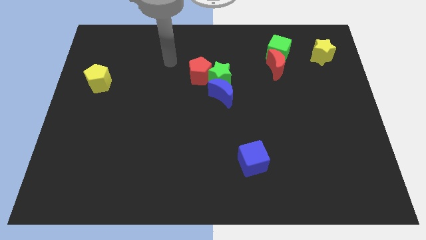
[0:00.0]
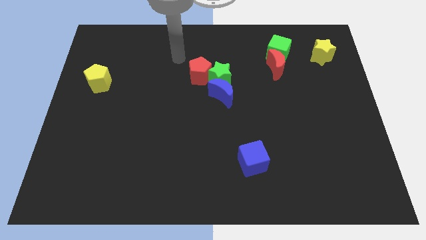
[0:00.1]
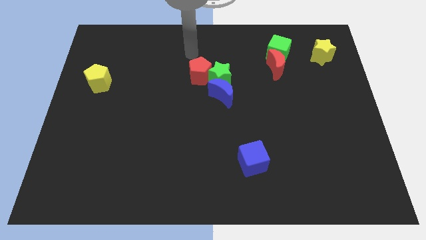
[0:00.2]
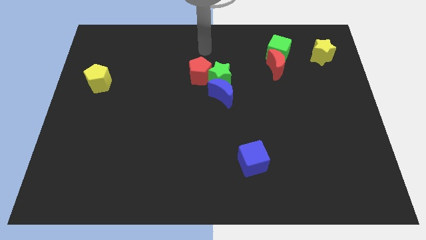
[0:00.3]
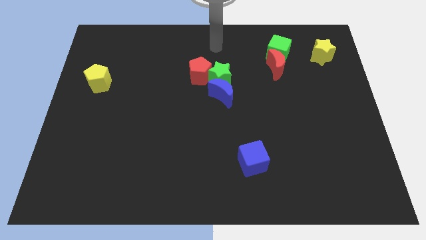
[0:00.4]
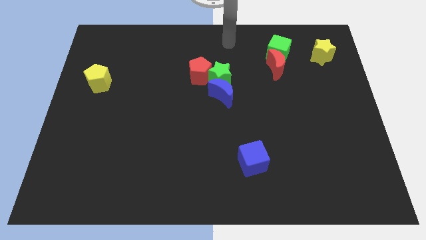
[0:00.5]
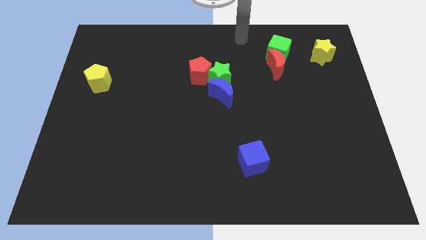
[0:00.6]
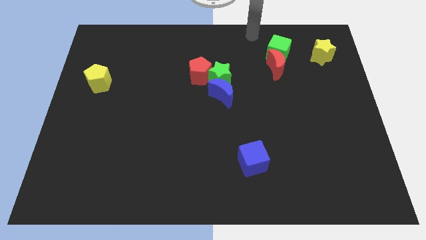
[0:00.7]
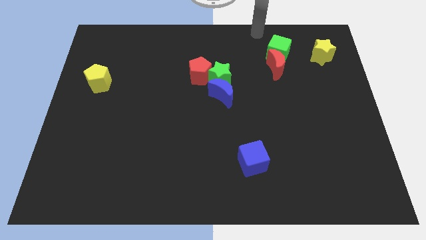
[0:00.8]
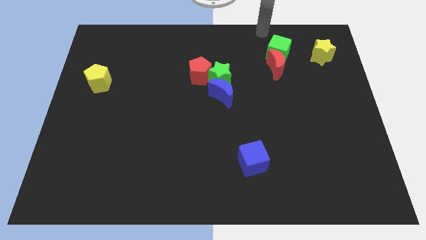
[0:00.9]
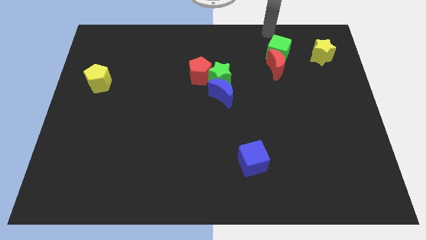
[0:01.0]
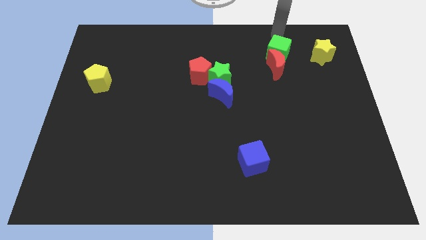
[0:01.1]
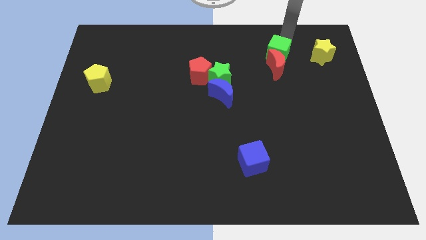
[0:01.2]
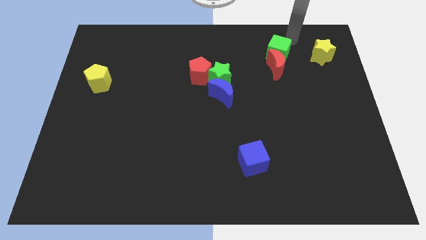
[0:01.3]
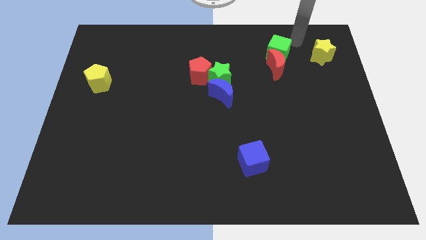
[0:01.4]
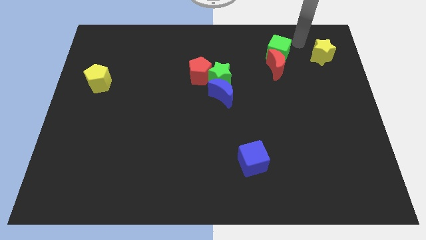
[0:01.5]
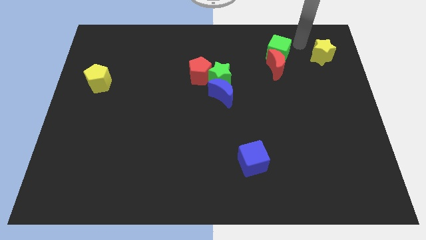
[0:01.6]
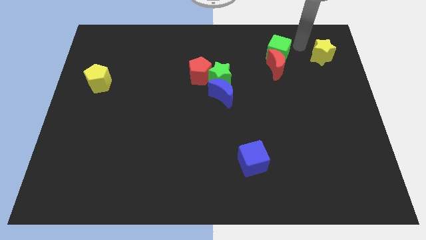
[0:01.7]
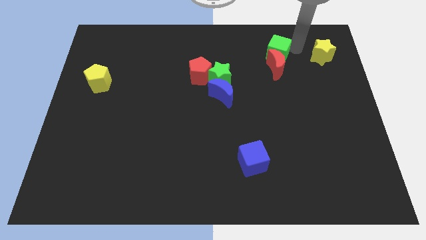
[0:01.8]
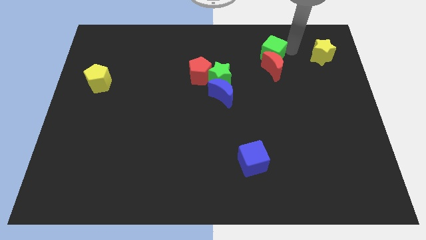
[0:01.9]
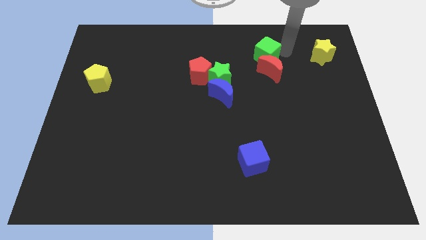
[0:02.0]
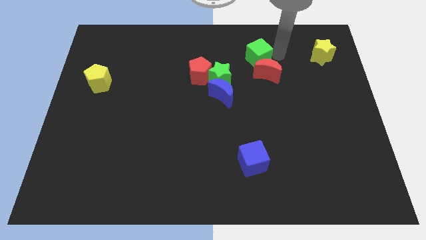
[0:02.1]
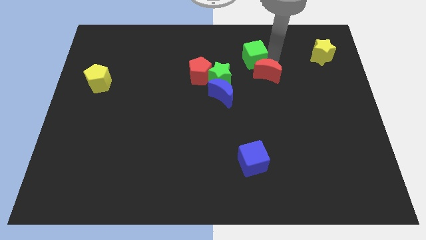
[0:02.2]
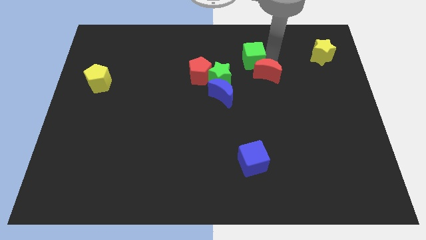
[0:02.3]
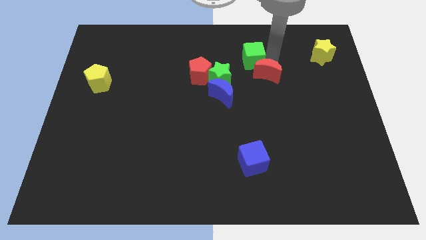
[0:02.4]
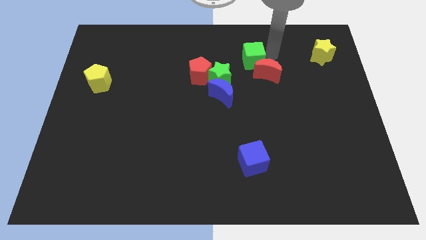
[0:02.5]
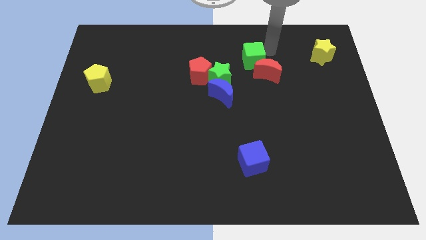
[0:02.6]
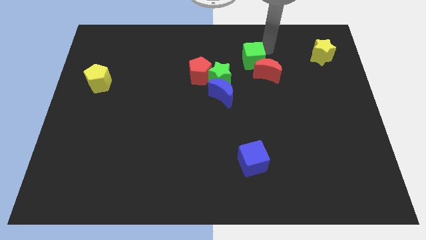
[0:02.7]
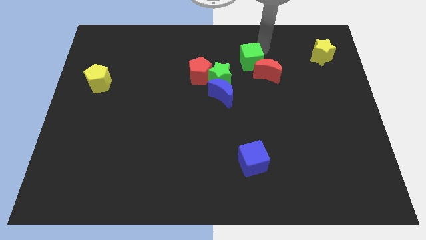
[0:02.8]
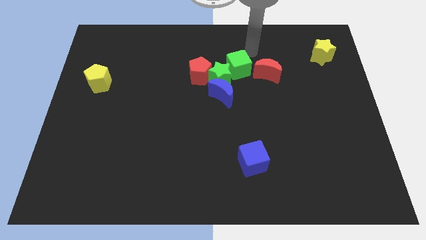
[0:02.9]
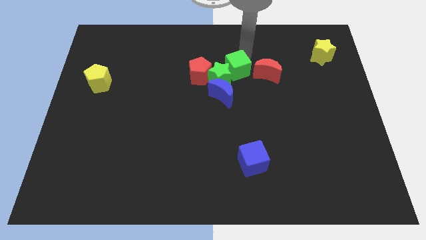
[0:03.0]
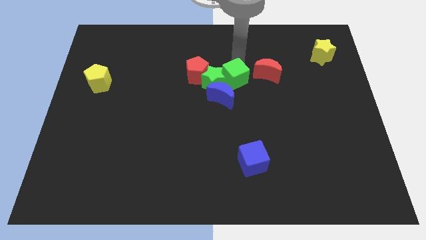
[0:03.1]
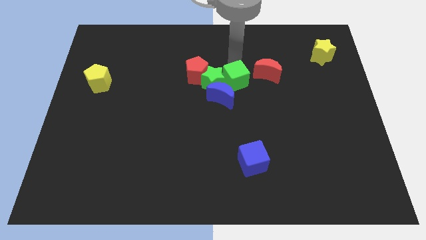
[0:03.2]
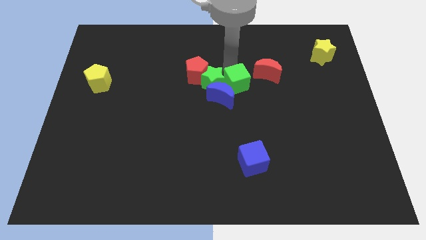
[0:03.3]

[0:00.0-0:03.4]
separate green cube from red crescent

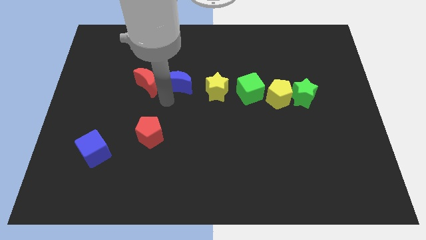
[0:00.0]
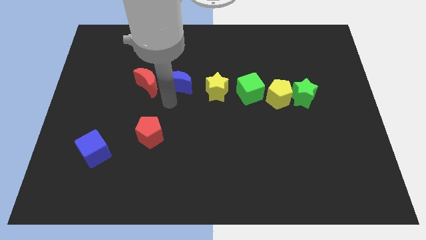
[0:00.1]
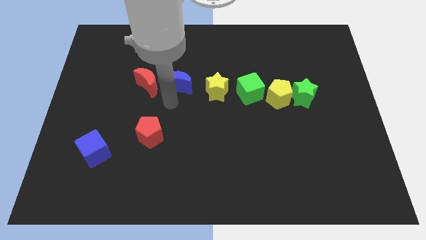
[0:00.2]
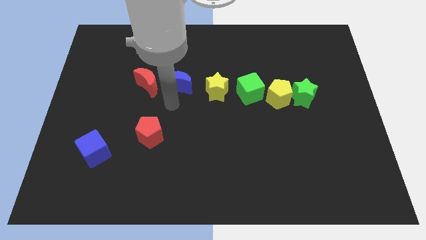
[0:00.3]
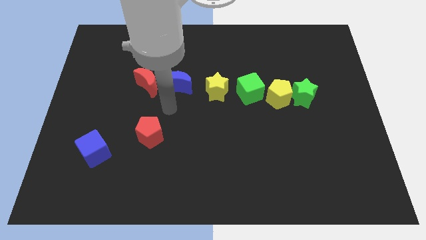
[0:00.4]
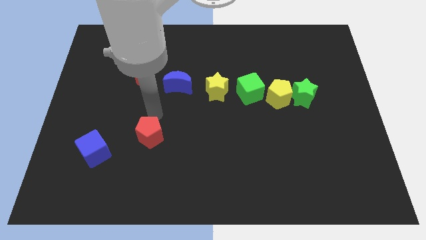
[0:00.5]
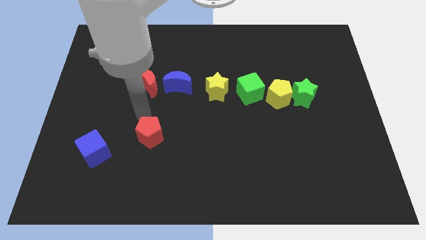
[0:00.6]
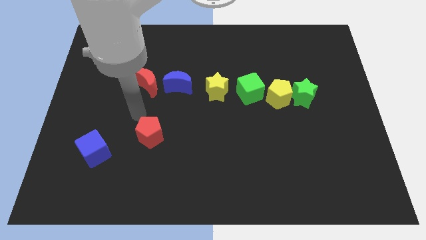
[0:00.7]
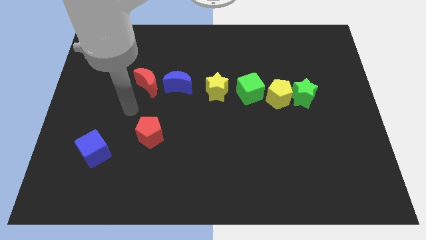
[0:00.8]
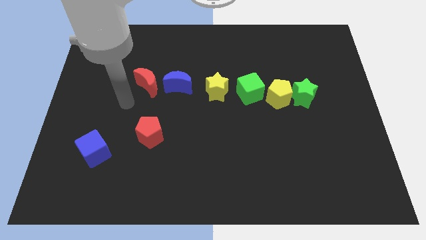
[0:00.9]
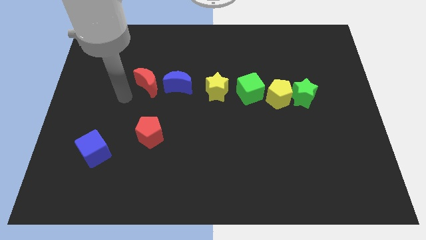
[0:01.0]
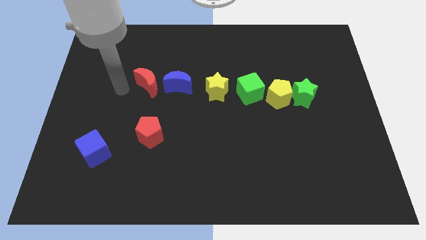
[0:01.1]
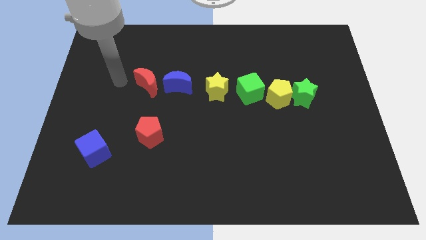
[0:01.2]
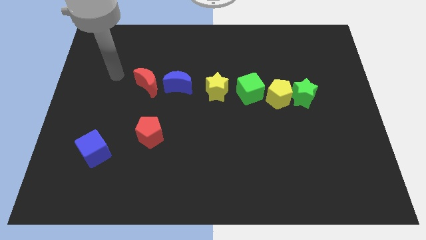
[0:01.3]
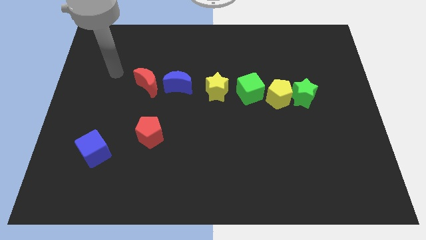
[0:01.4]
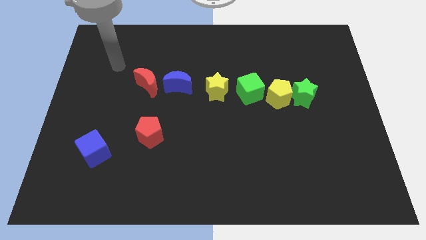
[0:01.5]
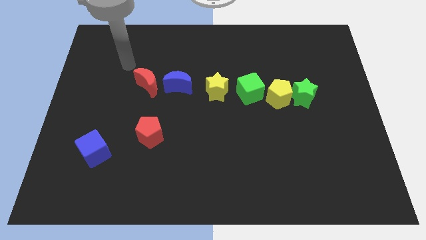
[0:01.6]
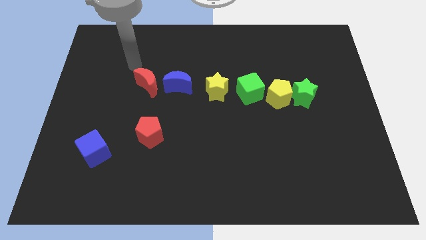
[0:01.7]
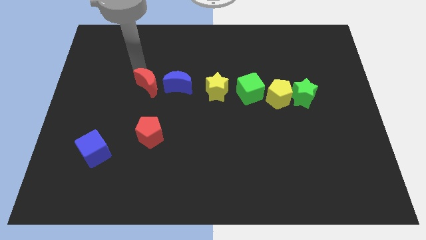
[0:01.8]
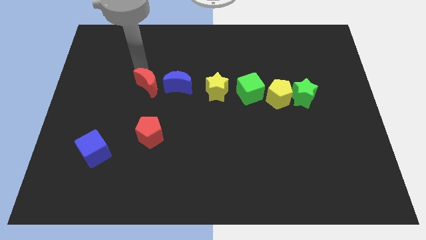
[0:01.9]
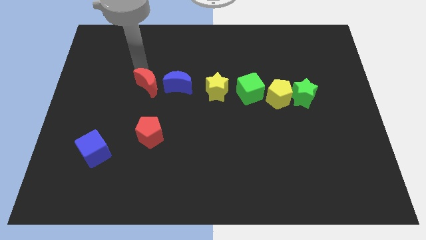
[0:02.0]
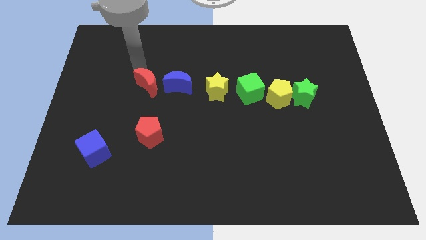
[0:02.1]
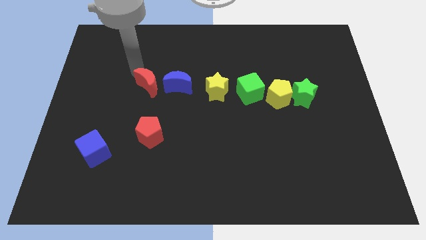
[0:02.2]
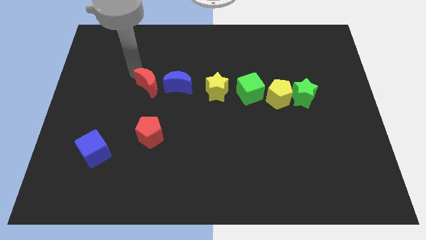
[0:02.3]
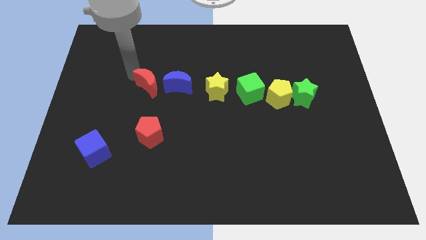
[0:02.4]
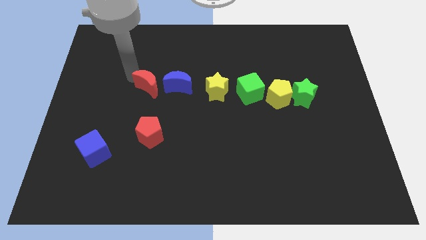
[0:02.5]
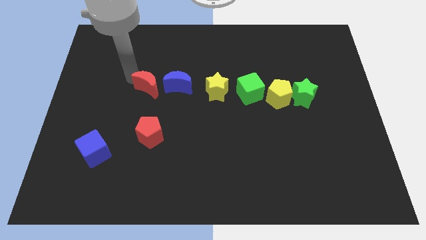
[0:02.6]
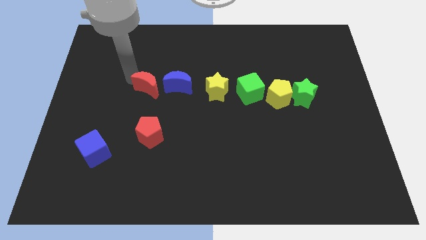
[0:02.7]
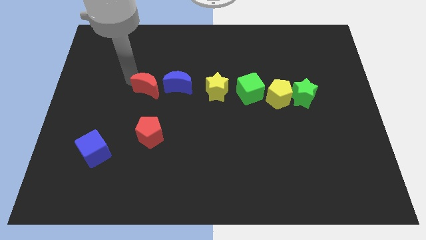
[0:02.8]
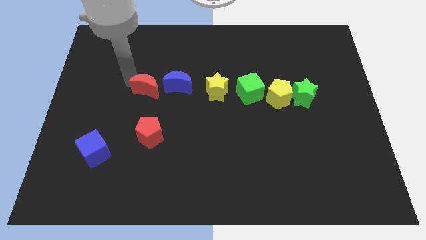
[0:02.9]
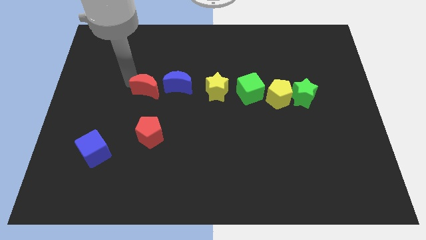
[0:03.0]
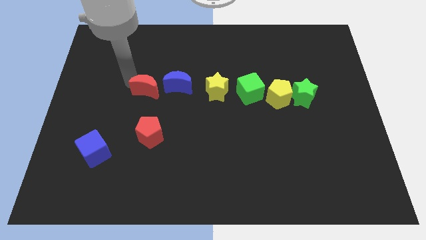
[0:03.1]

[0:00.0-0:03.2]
move the red crescent slightly parallel to the top of red pentagon

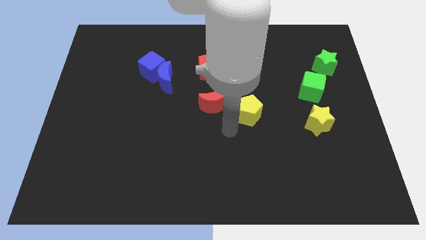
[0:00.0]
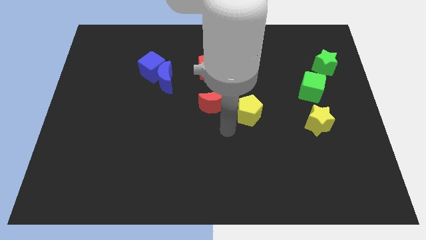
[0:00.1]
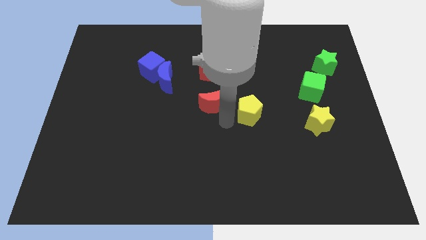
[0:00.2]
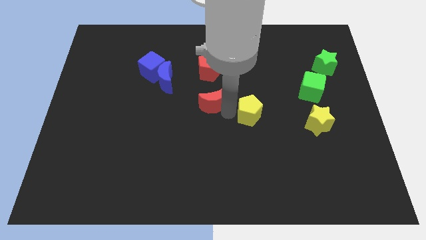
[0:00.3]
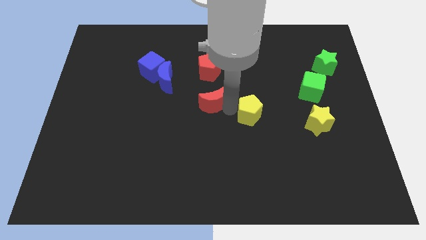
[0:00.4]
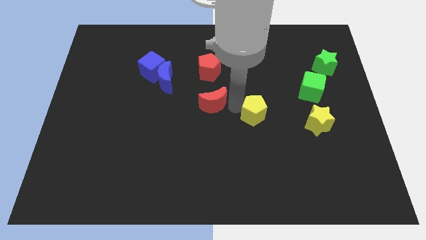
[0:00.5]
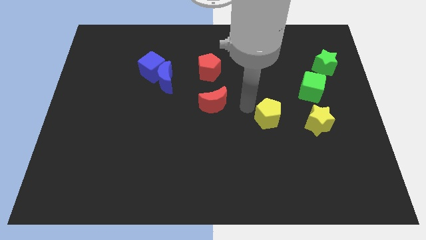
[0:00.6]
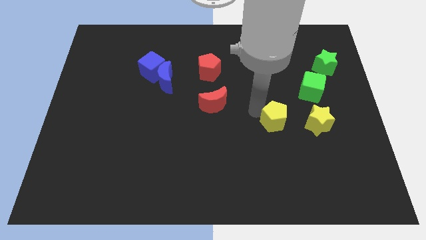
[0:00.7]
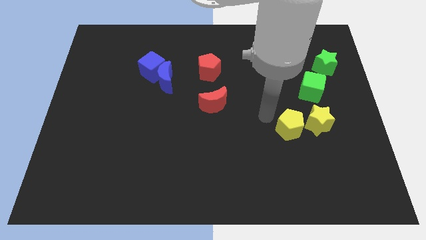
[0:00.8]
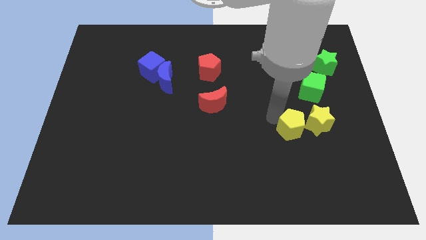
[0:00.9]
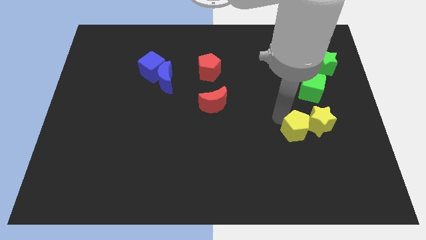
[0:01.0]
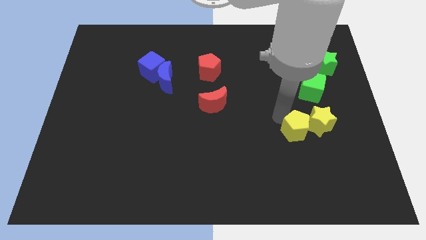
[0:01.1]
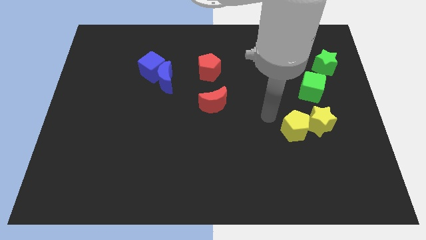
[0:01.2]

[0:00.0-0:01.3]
push the yellow pentagon into the yellow star

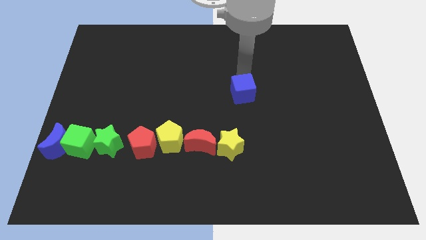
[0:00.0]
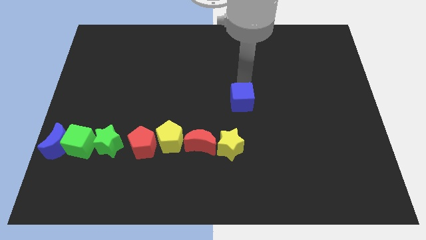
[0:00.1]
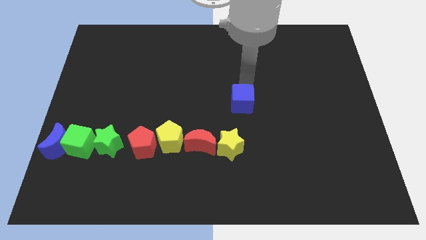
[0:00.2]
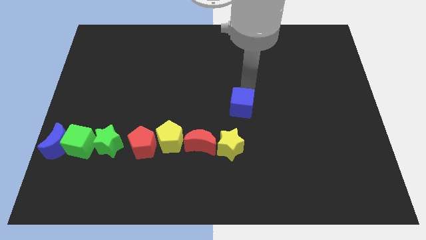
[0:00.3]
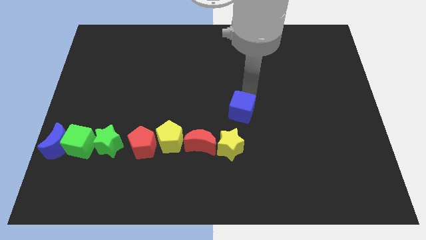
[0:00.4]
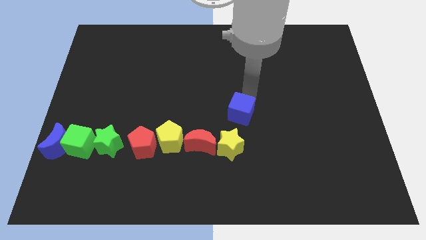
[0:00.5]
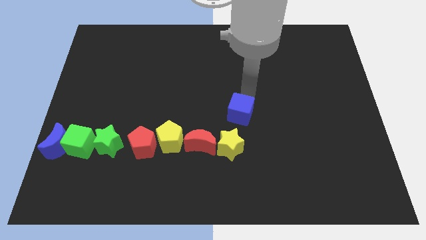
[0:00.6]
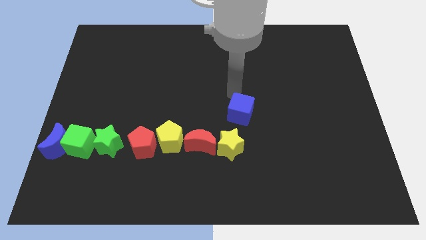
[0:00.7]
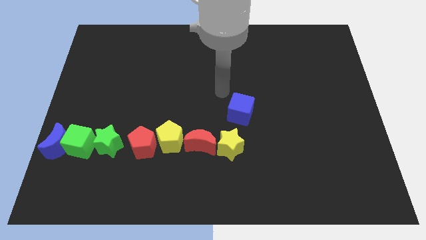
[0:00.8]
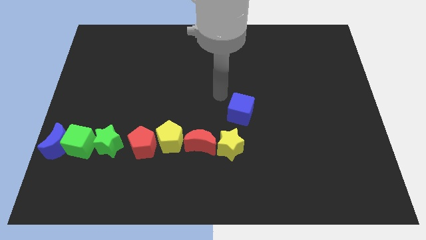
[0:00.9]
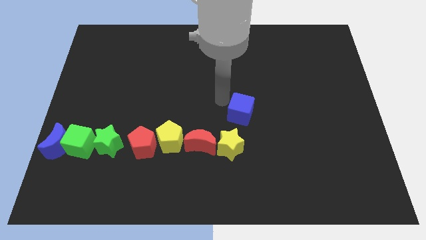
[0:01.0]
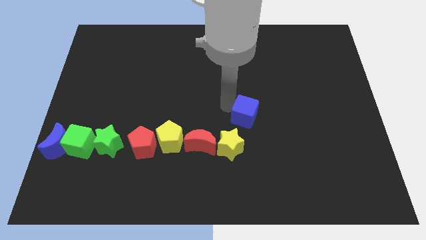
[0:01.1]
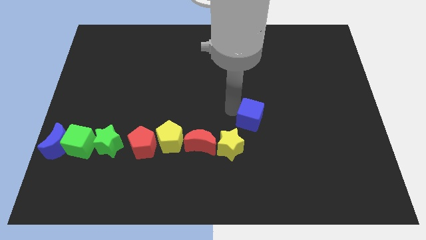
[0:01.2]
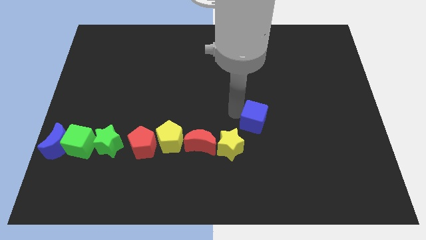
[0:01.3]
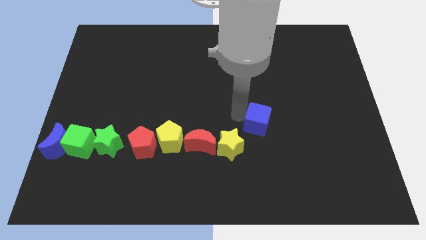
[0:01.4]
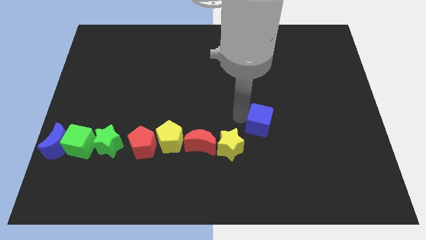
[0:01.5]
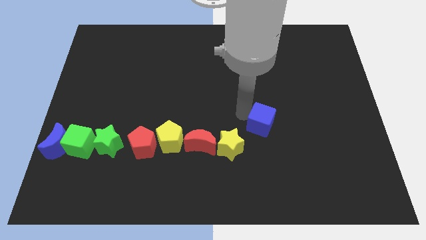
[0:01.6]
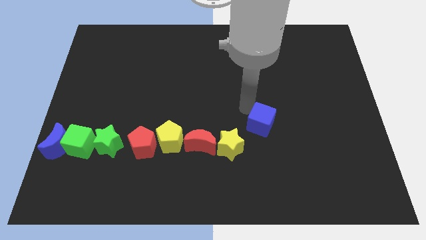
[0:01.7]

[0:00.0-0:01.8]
move blue block close to the yellow star
